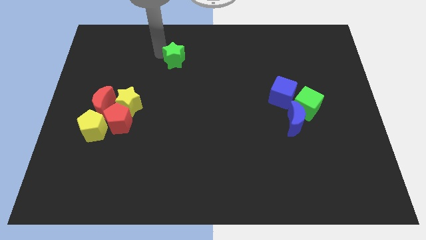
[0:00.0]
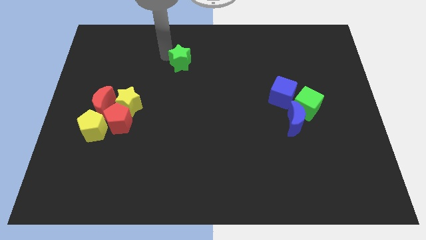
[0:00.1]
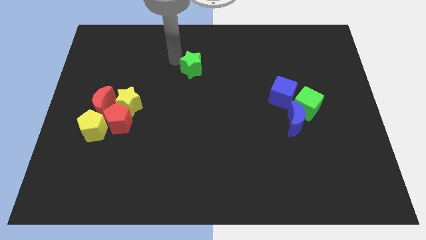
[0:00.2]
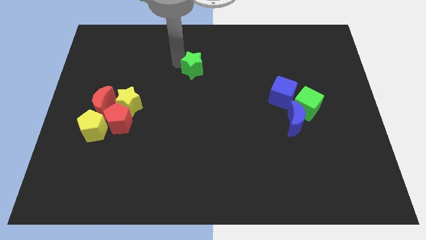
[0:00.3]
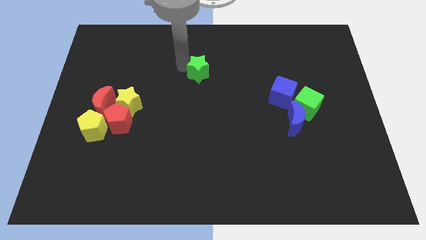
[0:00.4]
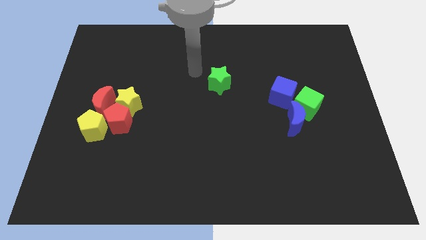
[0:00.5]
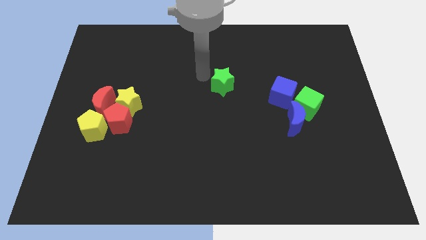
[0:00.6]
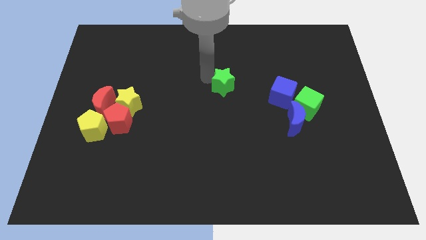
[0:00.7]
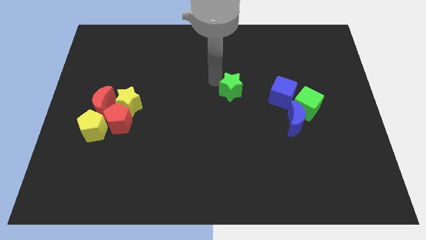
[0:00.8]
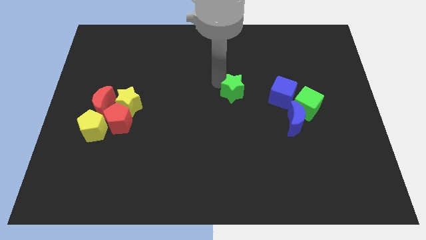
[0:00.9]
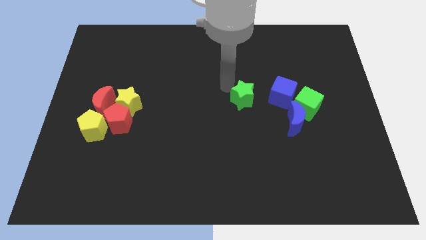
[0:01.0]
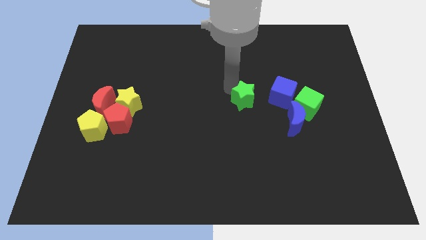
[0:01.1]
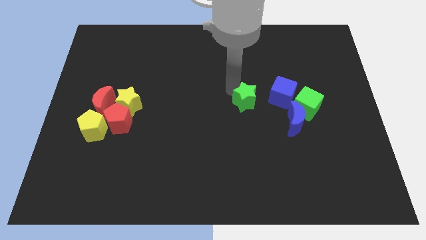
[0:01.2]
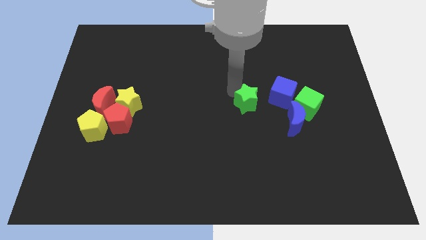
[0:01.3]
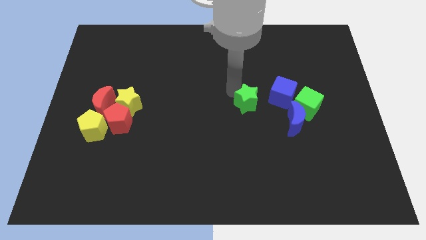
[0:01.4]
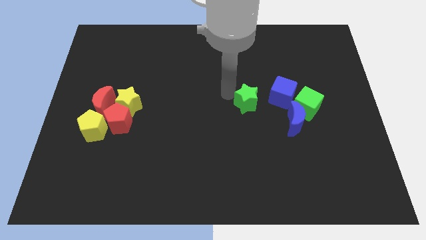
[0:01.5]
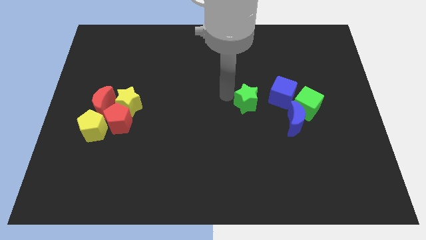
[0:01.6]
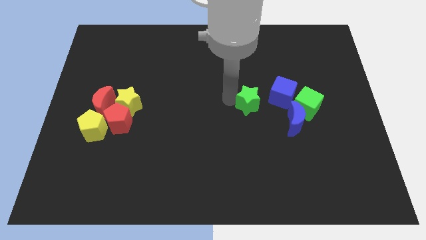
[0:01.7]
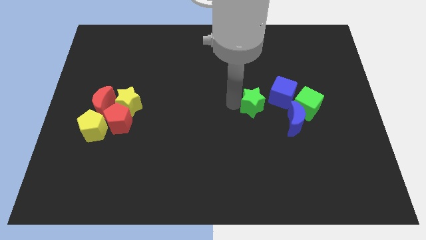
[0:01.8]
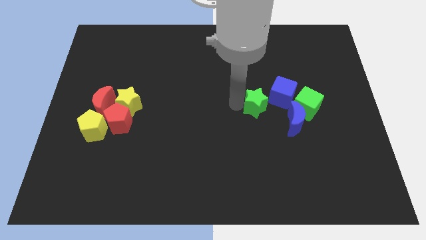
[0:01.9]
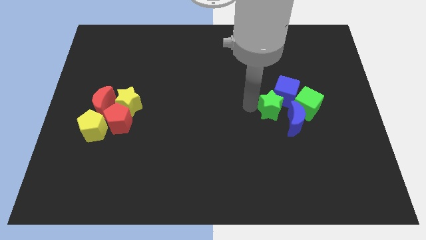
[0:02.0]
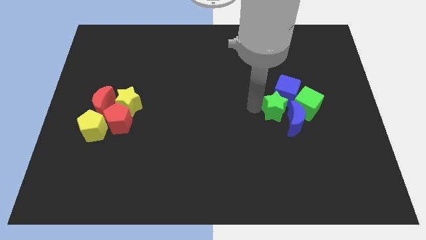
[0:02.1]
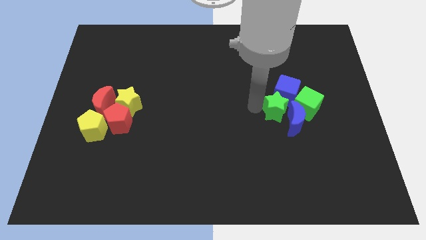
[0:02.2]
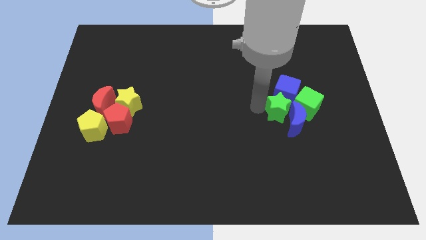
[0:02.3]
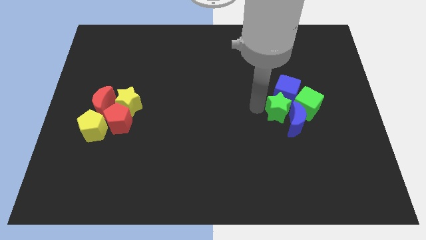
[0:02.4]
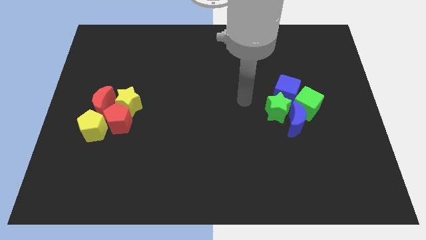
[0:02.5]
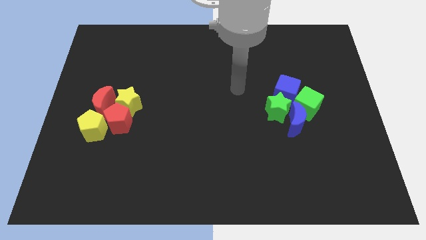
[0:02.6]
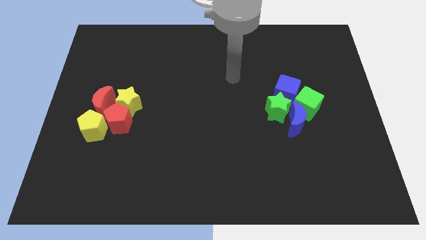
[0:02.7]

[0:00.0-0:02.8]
place the green star into a group of blue blocks

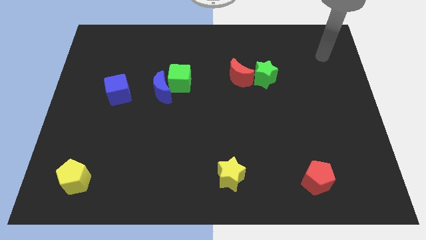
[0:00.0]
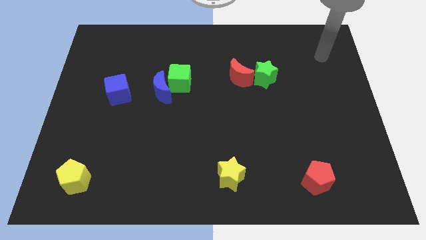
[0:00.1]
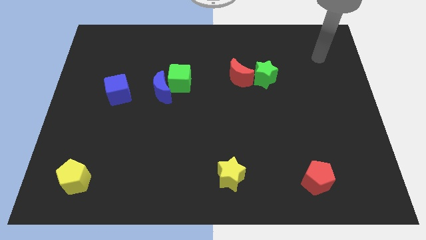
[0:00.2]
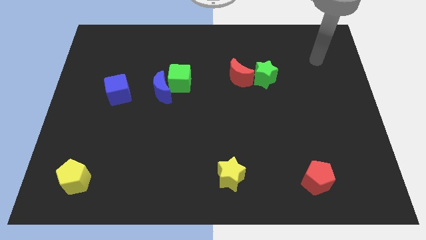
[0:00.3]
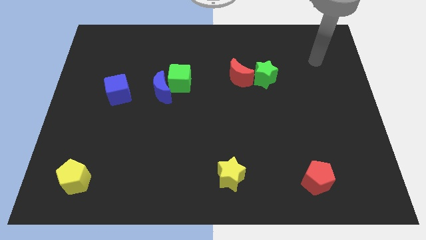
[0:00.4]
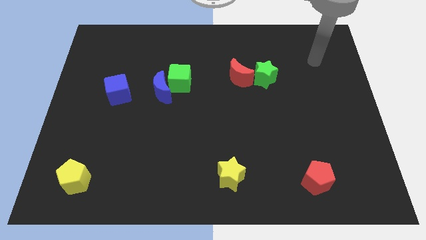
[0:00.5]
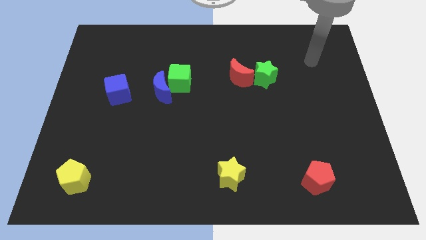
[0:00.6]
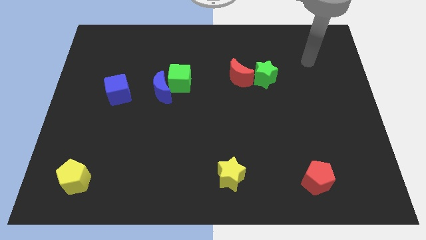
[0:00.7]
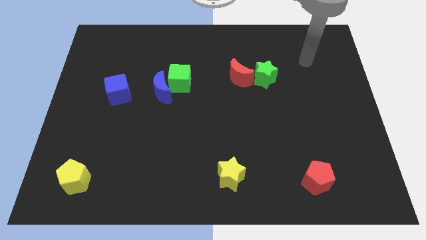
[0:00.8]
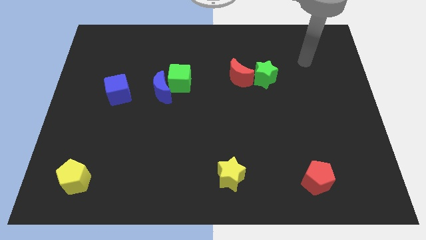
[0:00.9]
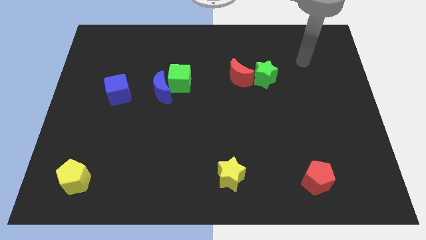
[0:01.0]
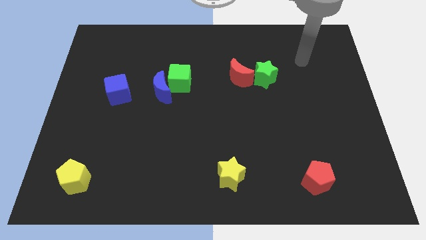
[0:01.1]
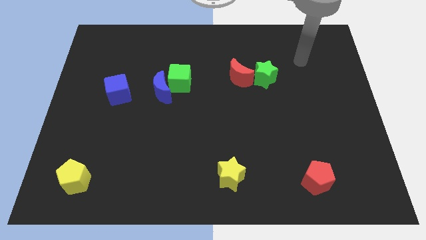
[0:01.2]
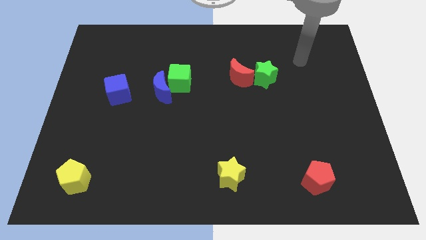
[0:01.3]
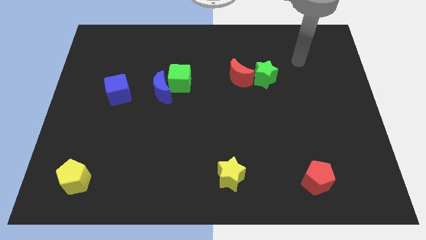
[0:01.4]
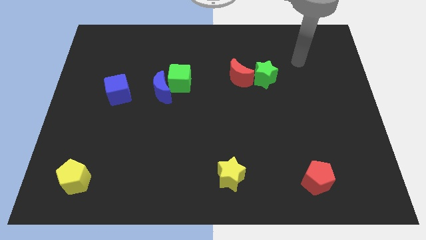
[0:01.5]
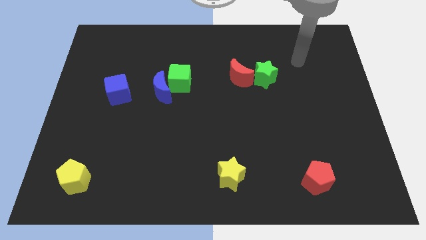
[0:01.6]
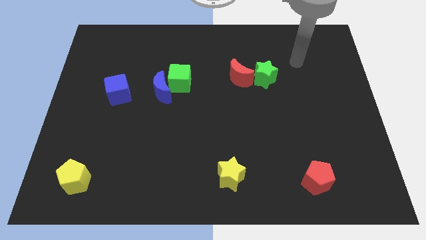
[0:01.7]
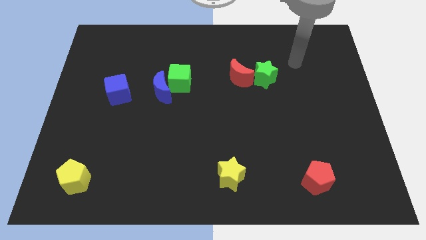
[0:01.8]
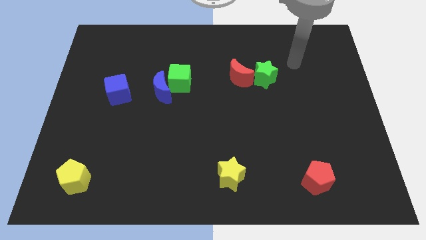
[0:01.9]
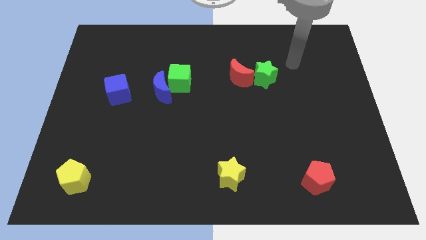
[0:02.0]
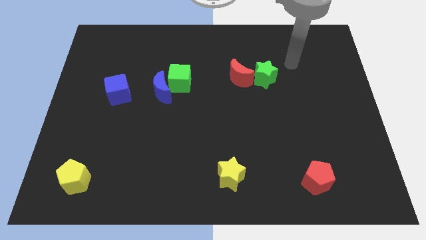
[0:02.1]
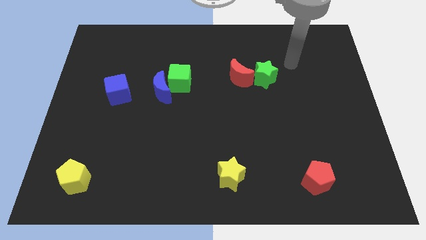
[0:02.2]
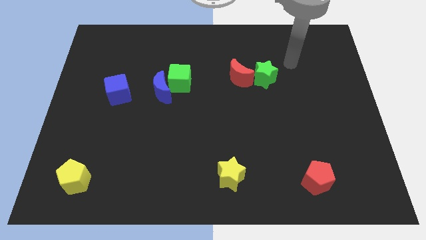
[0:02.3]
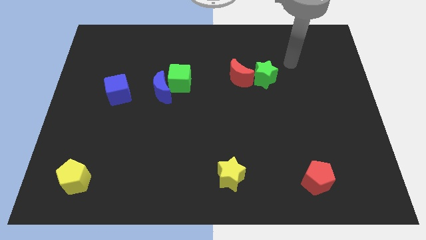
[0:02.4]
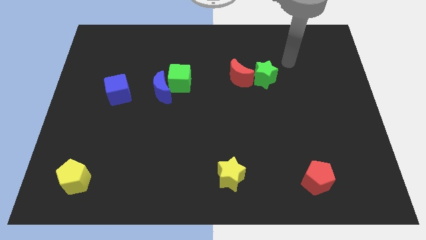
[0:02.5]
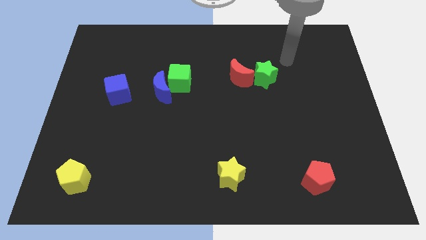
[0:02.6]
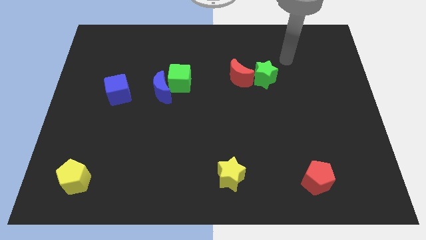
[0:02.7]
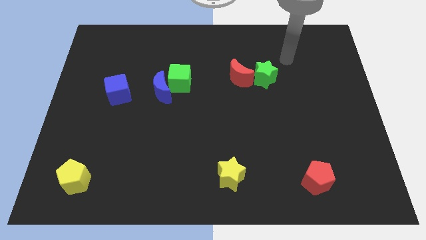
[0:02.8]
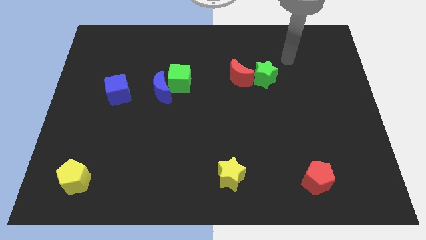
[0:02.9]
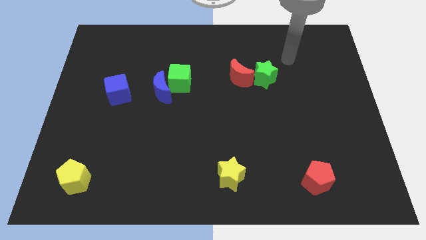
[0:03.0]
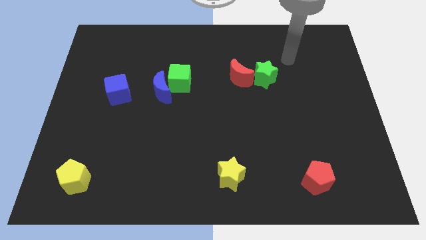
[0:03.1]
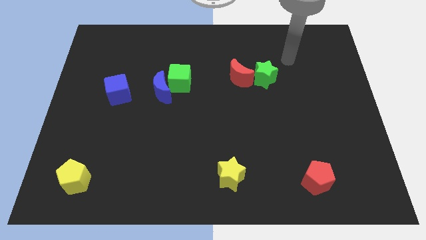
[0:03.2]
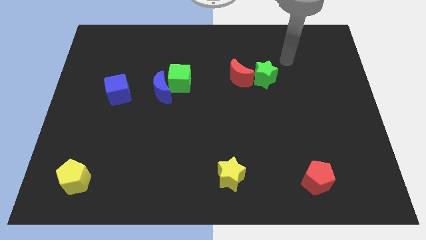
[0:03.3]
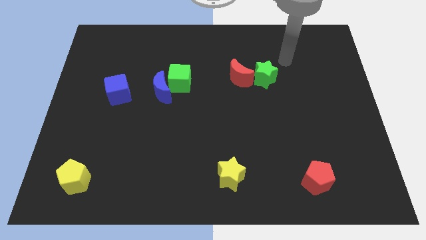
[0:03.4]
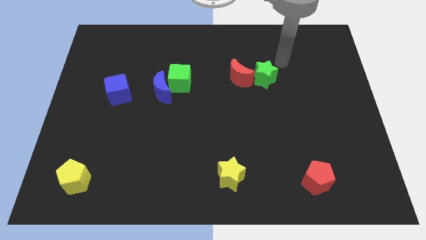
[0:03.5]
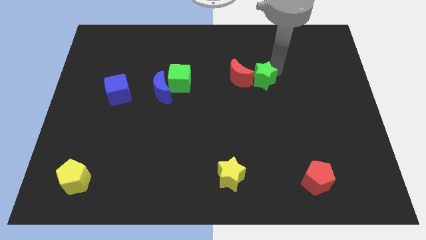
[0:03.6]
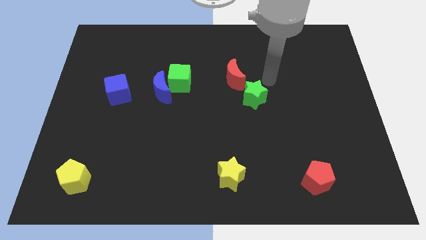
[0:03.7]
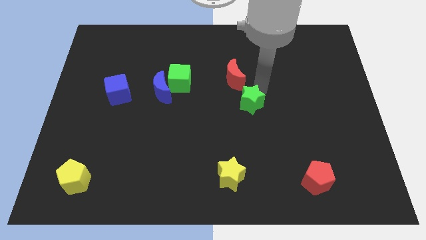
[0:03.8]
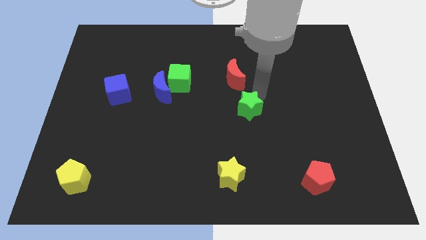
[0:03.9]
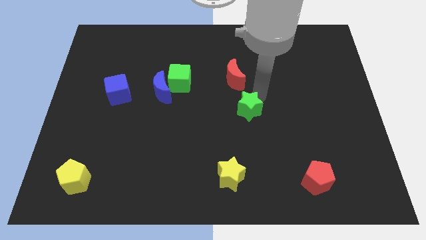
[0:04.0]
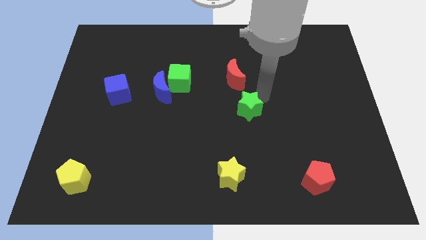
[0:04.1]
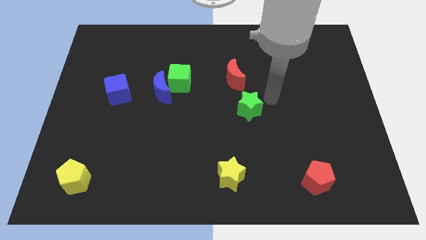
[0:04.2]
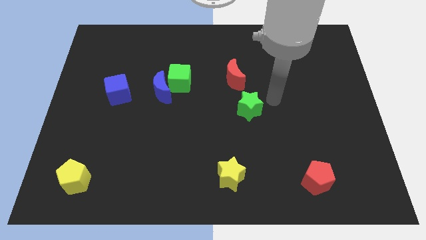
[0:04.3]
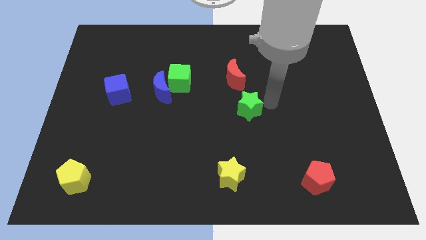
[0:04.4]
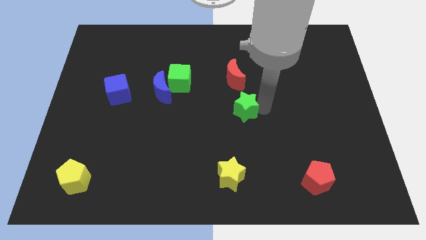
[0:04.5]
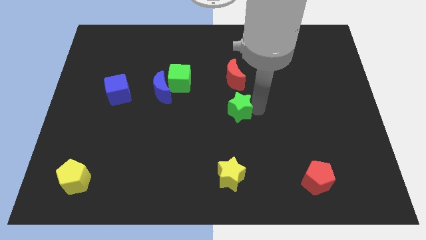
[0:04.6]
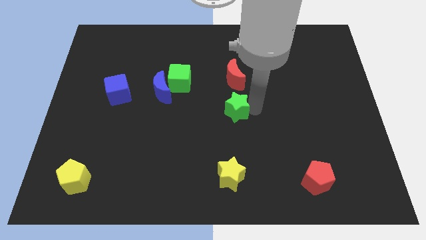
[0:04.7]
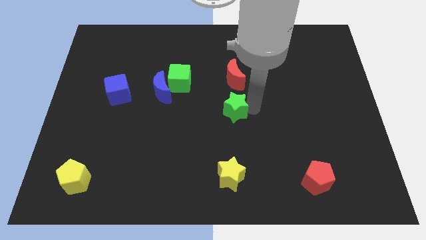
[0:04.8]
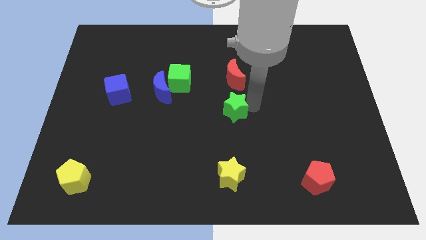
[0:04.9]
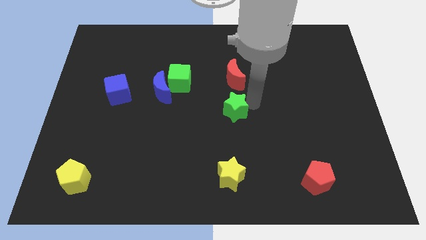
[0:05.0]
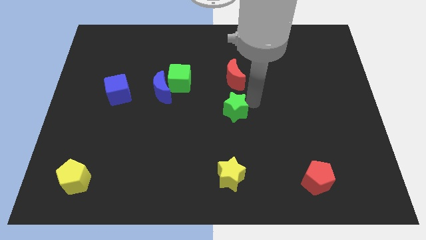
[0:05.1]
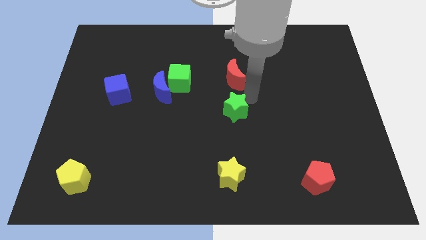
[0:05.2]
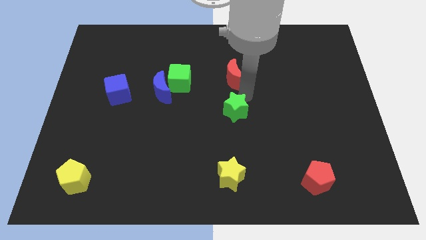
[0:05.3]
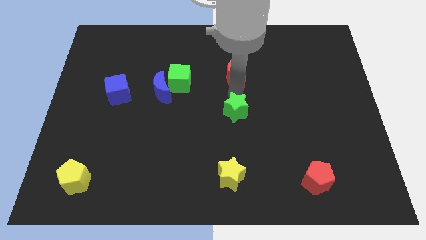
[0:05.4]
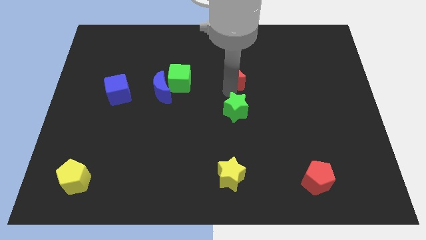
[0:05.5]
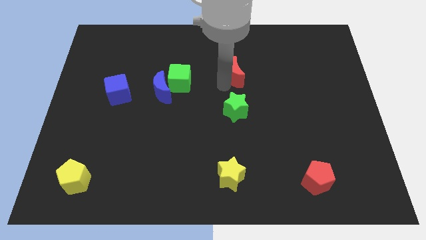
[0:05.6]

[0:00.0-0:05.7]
place the green star to the bottom of the red moon

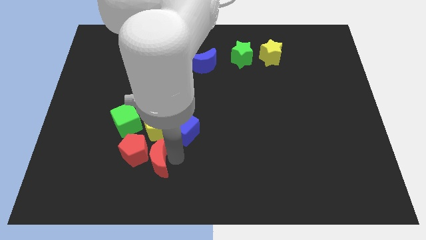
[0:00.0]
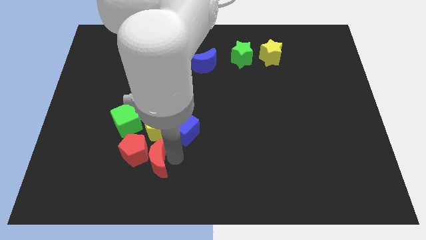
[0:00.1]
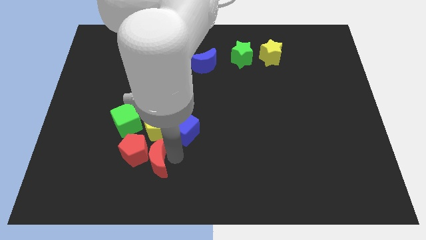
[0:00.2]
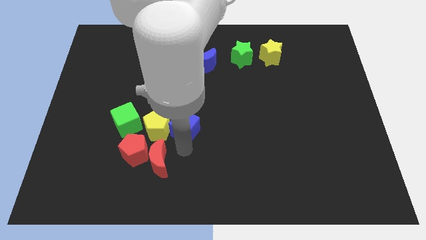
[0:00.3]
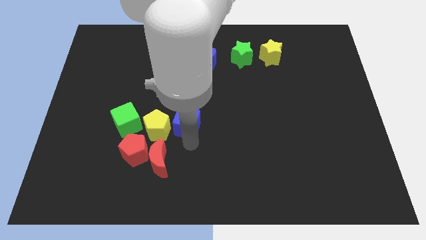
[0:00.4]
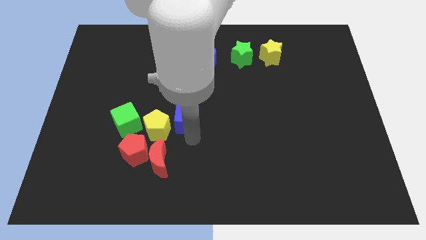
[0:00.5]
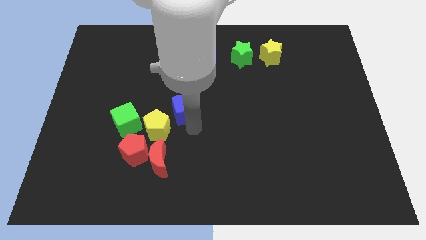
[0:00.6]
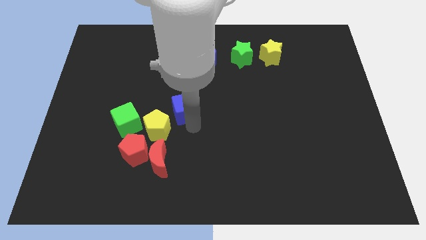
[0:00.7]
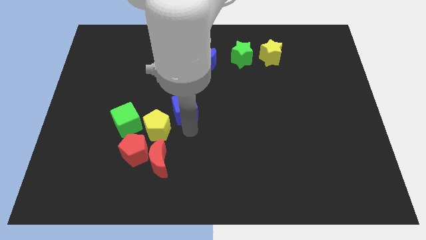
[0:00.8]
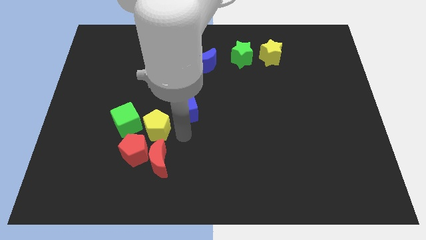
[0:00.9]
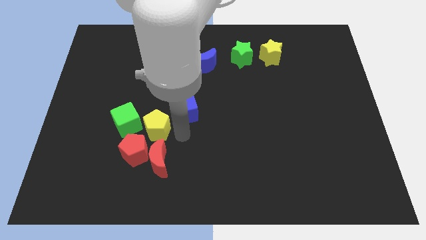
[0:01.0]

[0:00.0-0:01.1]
separate blue cube from yellow pentagon
